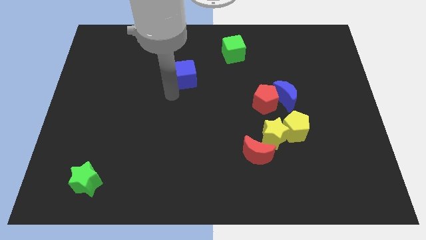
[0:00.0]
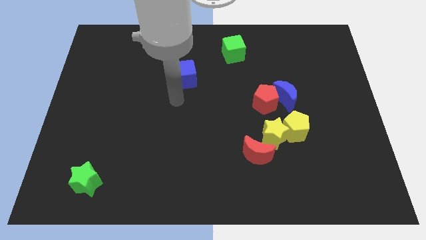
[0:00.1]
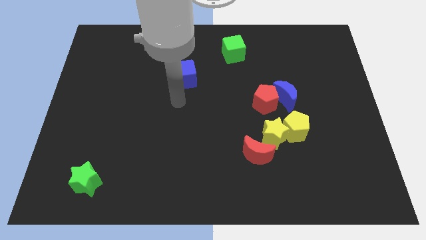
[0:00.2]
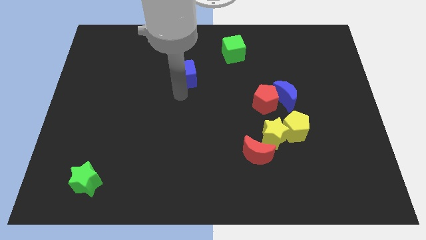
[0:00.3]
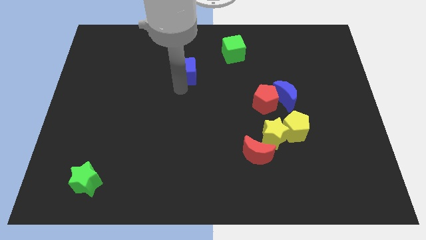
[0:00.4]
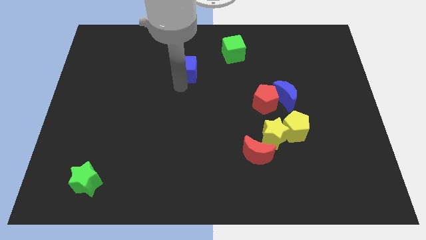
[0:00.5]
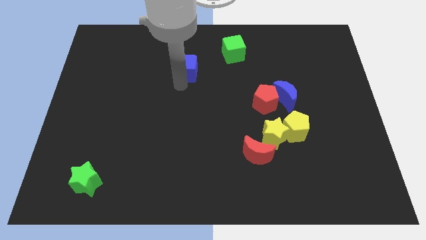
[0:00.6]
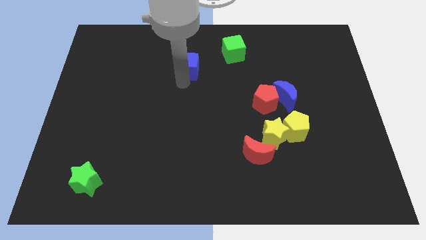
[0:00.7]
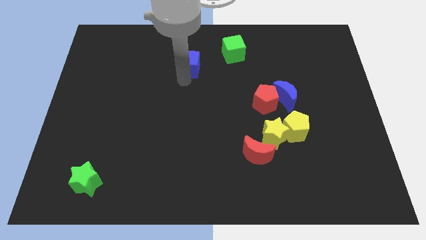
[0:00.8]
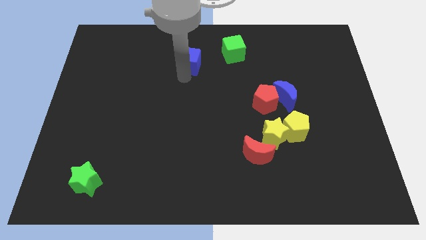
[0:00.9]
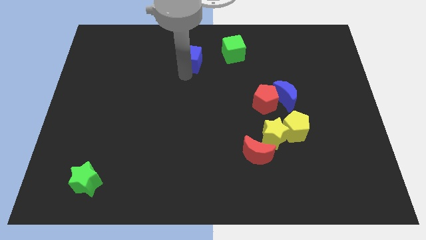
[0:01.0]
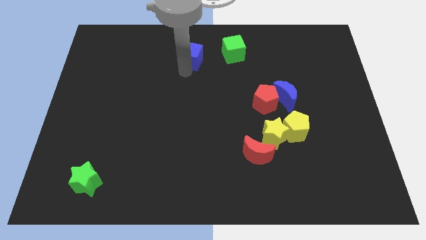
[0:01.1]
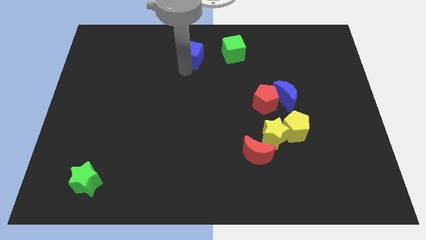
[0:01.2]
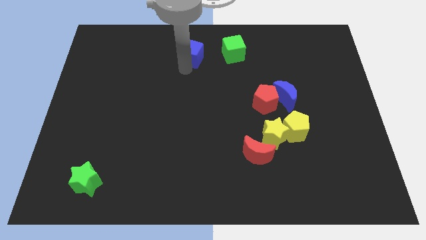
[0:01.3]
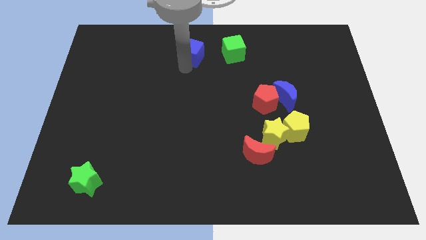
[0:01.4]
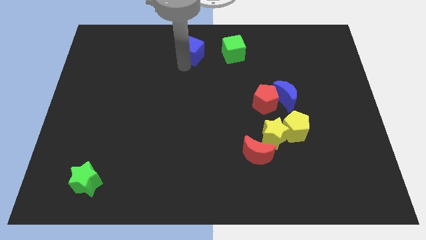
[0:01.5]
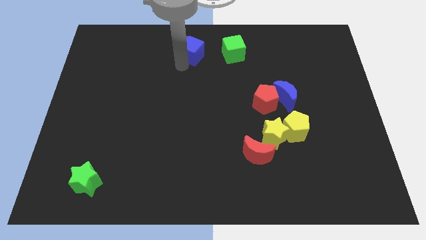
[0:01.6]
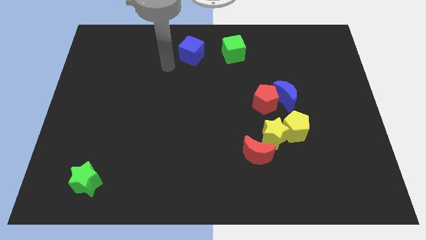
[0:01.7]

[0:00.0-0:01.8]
push the blue cube to the left of the green cube

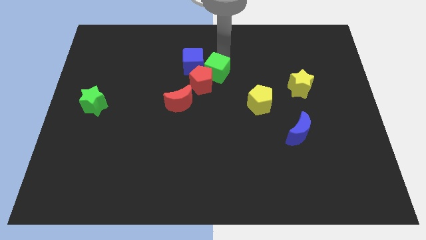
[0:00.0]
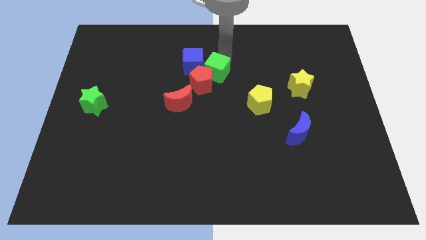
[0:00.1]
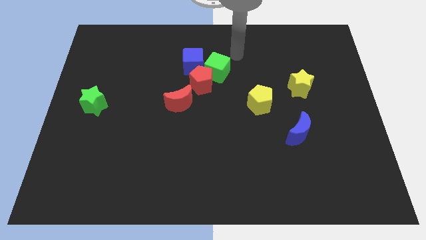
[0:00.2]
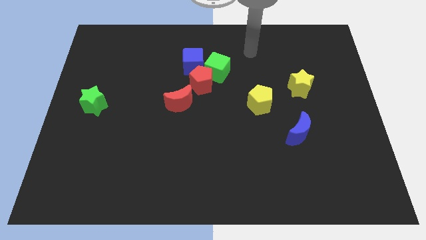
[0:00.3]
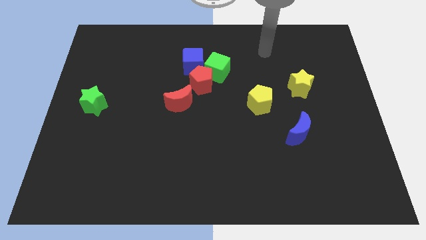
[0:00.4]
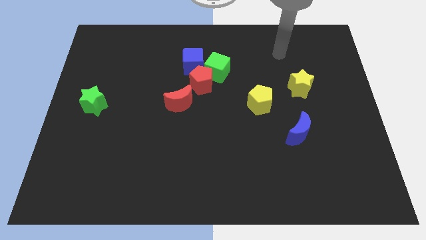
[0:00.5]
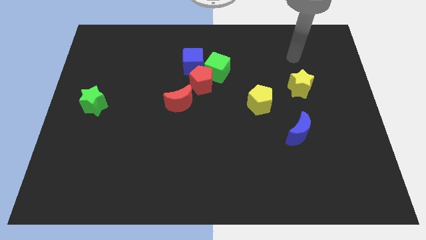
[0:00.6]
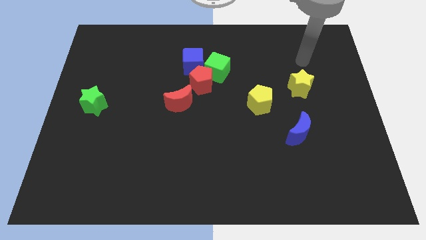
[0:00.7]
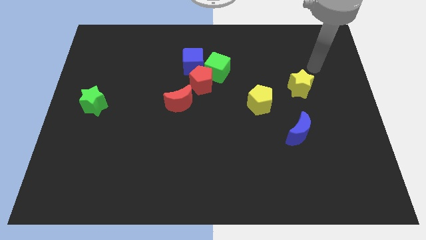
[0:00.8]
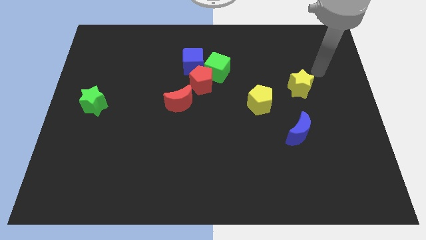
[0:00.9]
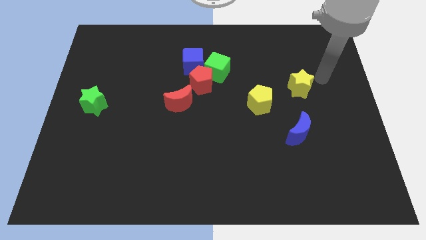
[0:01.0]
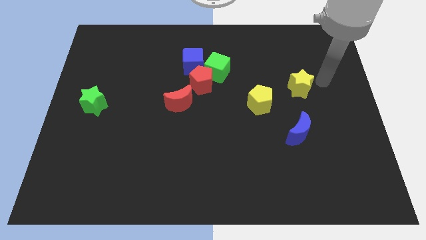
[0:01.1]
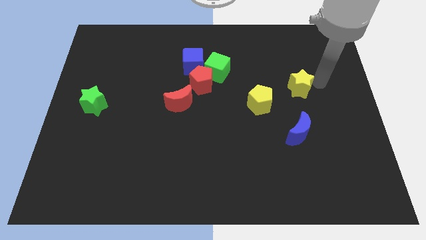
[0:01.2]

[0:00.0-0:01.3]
move your arm away from the green cube

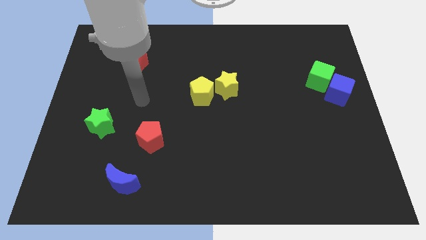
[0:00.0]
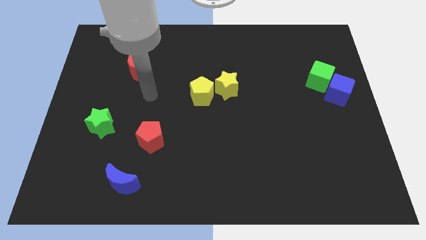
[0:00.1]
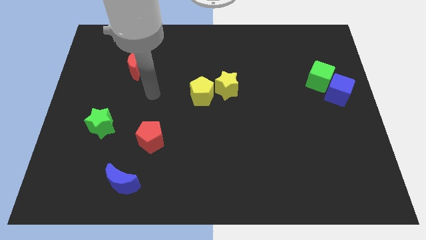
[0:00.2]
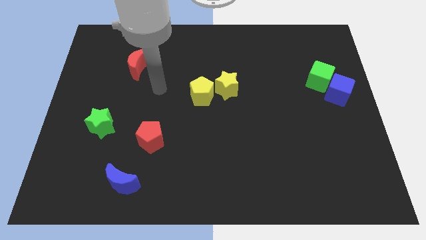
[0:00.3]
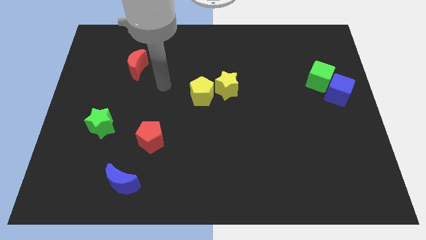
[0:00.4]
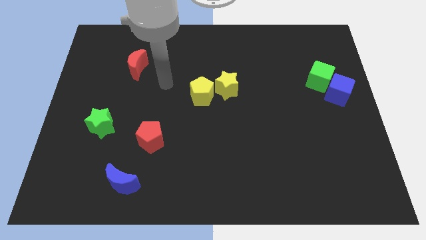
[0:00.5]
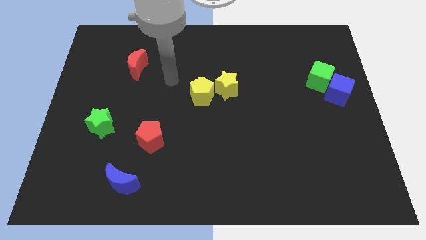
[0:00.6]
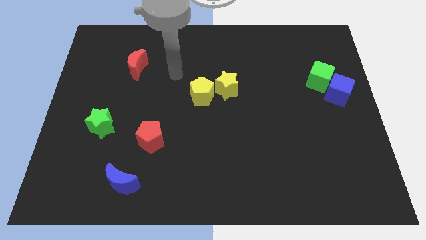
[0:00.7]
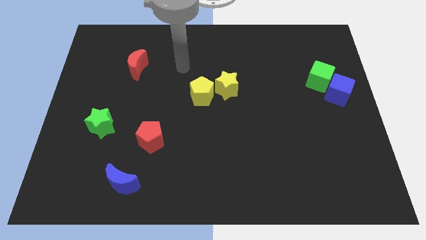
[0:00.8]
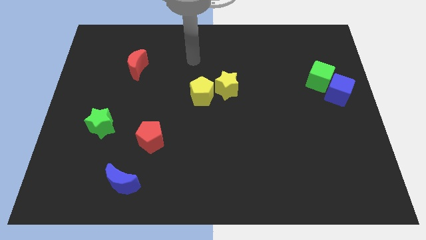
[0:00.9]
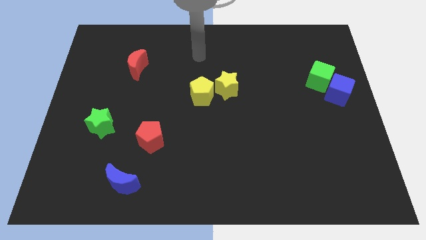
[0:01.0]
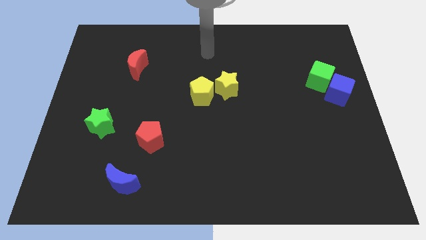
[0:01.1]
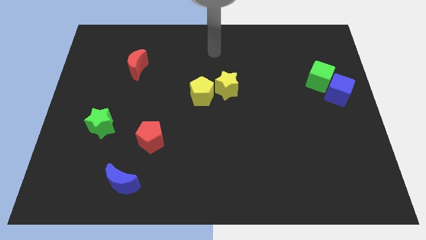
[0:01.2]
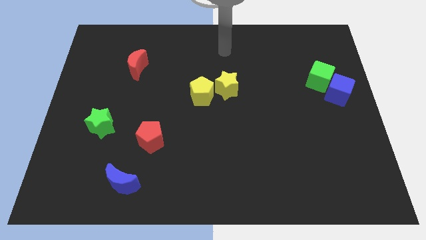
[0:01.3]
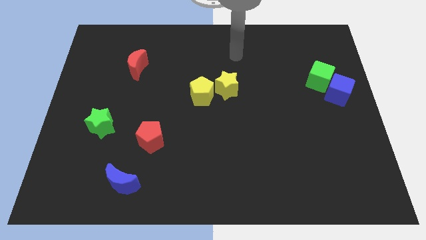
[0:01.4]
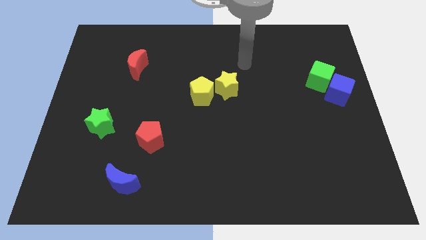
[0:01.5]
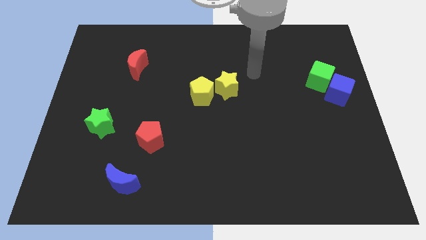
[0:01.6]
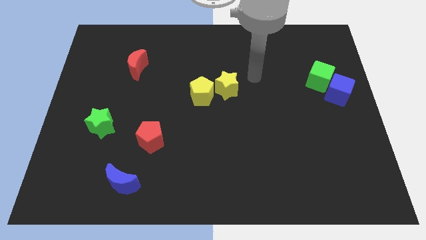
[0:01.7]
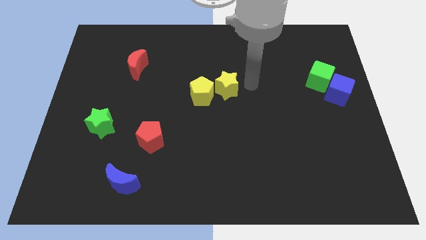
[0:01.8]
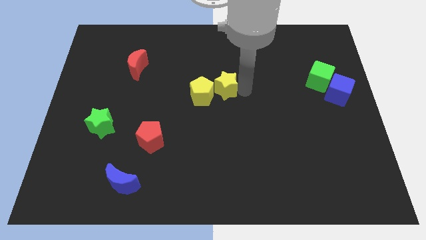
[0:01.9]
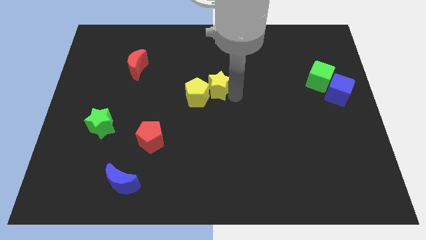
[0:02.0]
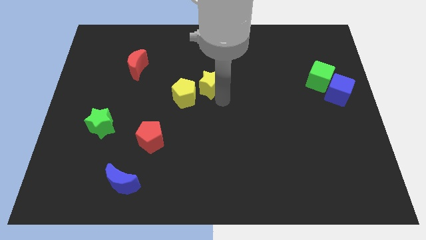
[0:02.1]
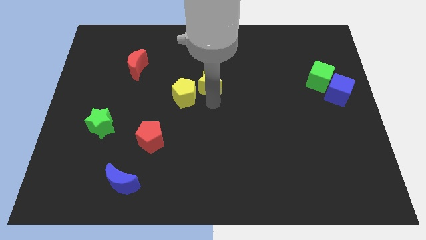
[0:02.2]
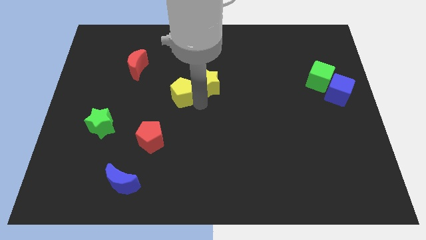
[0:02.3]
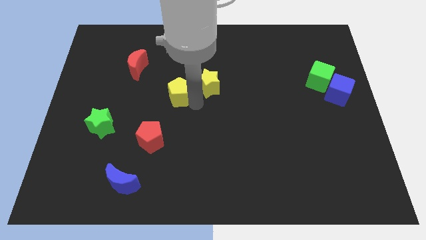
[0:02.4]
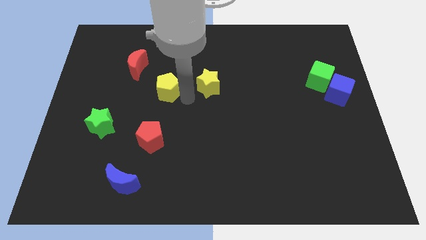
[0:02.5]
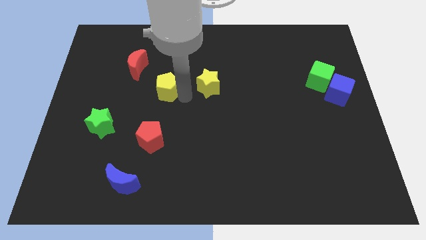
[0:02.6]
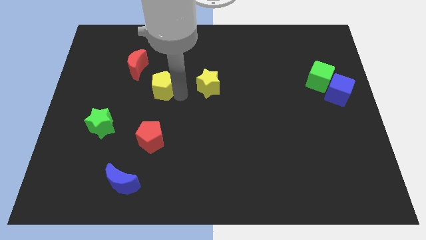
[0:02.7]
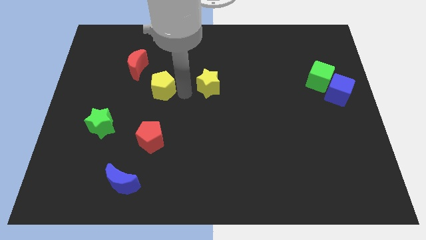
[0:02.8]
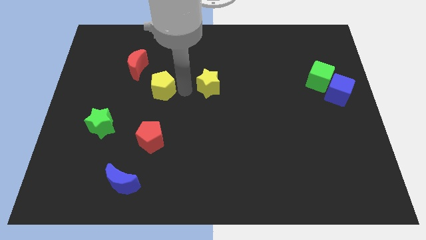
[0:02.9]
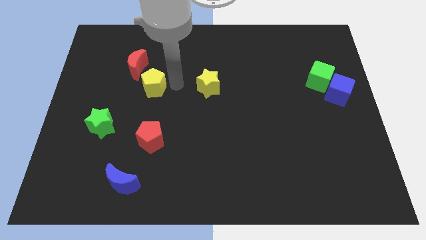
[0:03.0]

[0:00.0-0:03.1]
move the yellow pentagon away from the yellow star

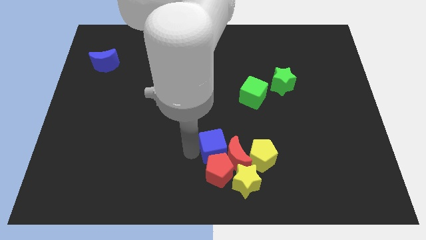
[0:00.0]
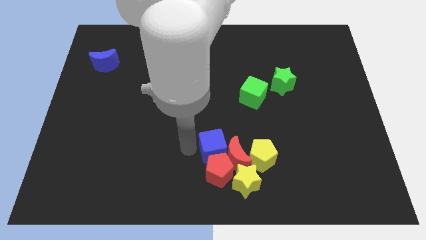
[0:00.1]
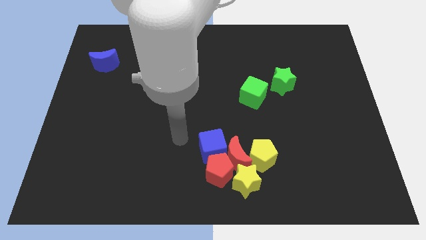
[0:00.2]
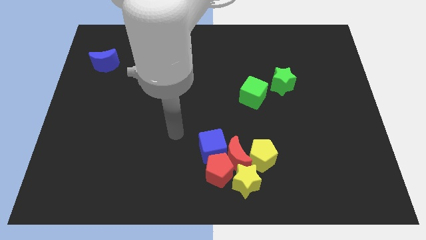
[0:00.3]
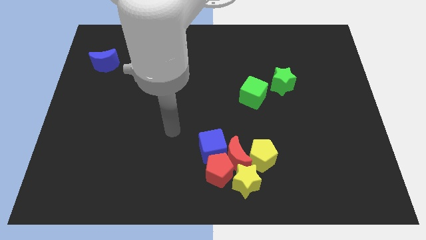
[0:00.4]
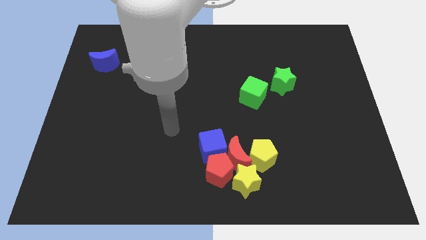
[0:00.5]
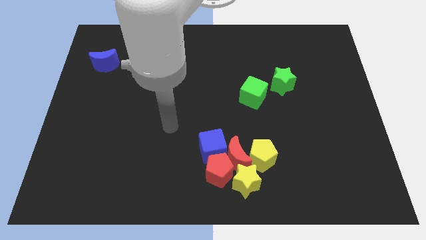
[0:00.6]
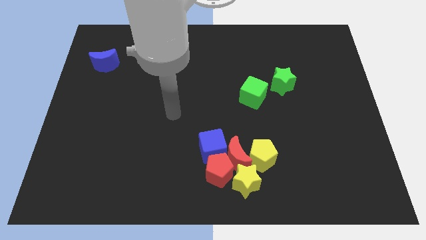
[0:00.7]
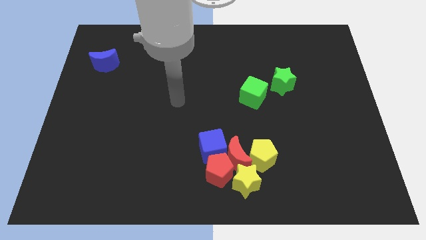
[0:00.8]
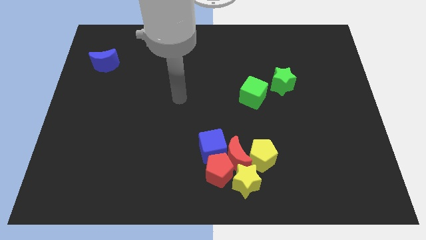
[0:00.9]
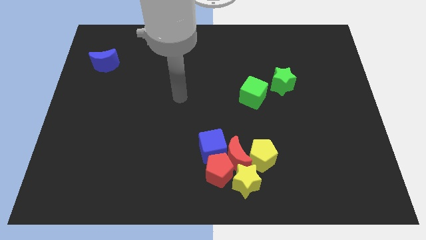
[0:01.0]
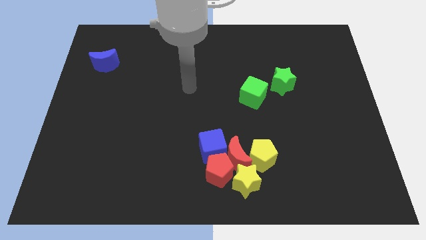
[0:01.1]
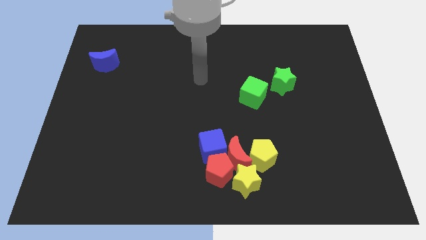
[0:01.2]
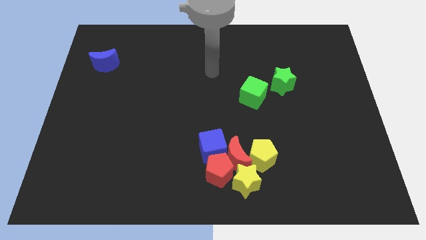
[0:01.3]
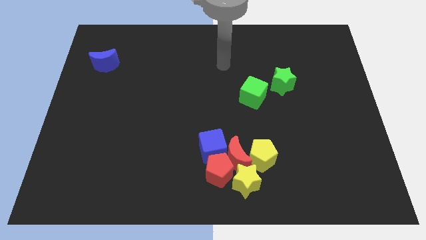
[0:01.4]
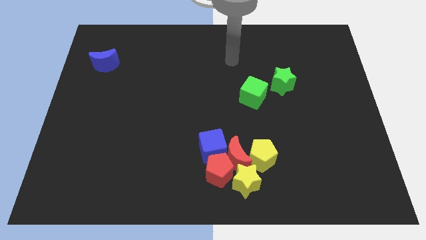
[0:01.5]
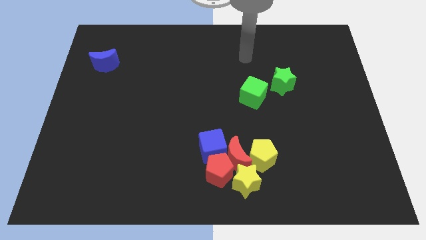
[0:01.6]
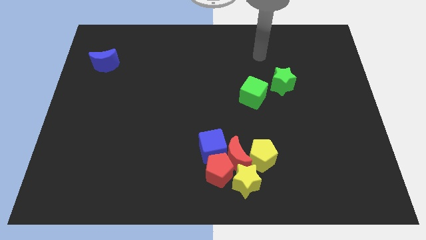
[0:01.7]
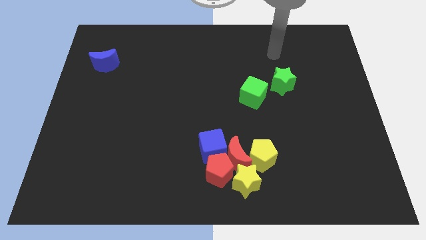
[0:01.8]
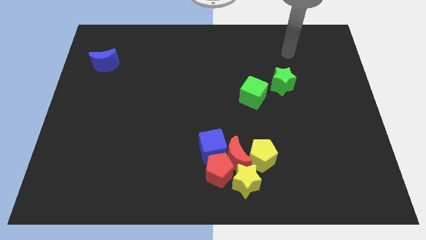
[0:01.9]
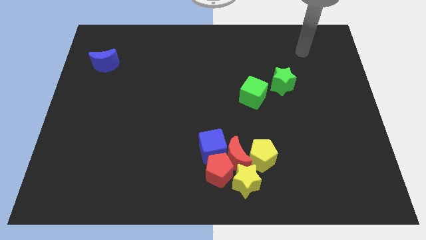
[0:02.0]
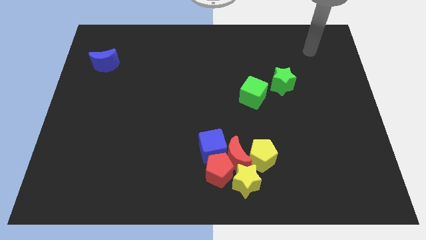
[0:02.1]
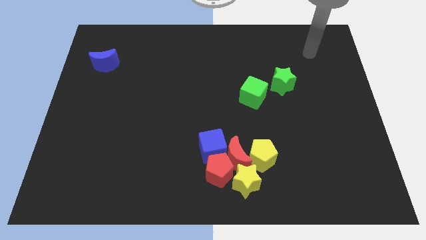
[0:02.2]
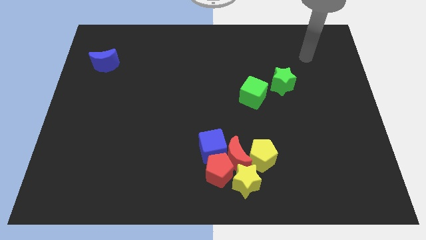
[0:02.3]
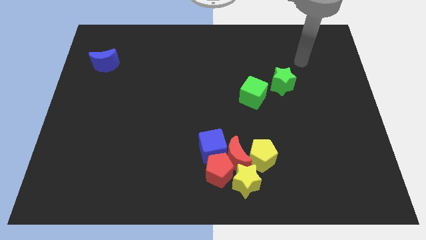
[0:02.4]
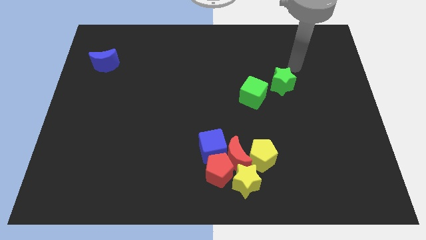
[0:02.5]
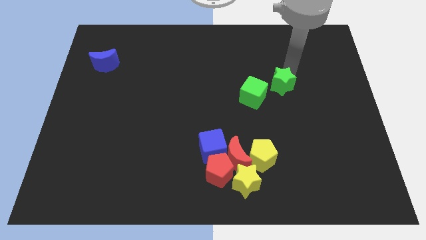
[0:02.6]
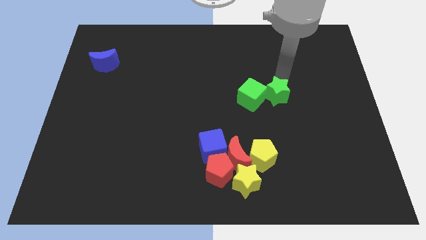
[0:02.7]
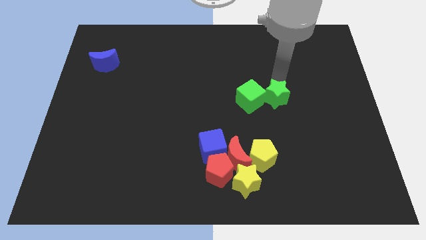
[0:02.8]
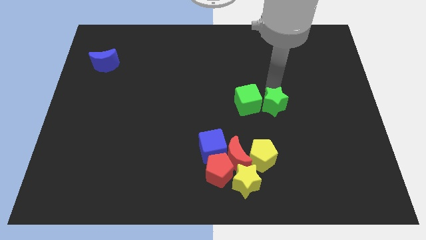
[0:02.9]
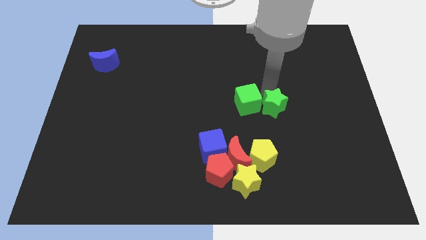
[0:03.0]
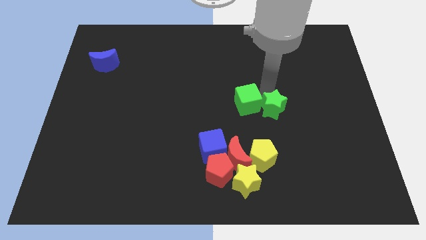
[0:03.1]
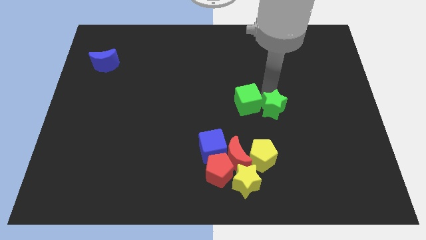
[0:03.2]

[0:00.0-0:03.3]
move the green blocks slightly down
